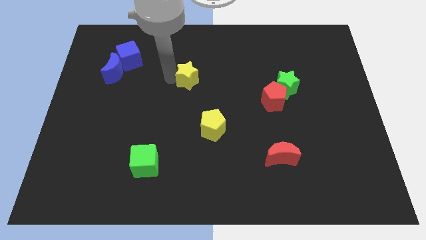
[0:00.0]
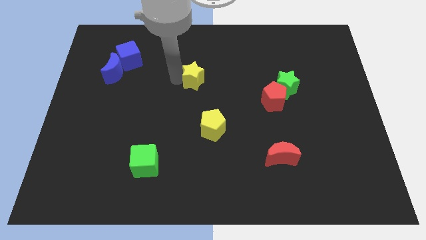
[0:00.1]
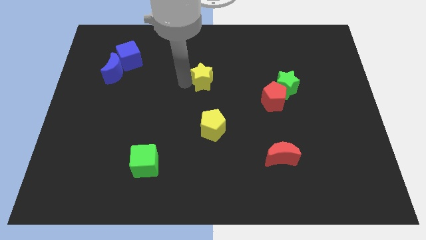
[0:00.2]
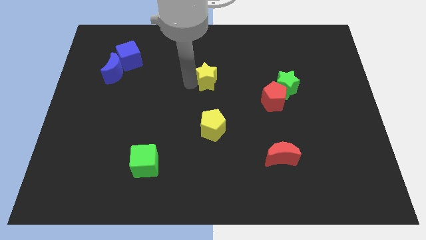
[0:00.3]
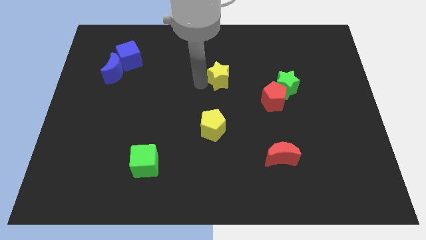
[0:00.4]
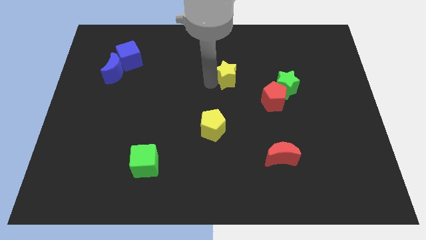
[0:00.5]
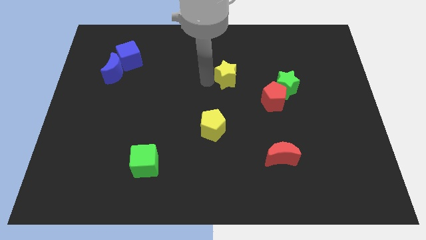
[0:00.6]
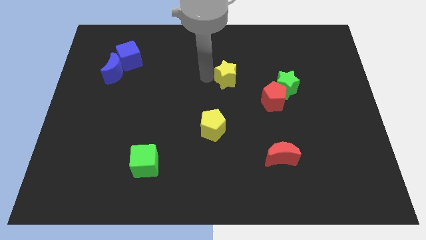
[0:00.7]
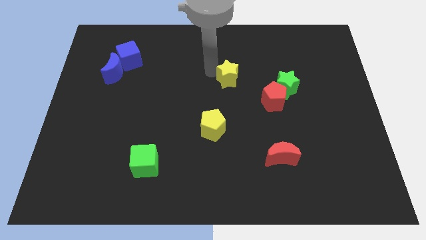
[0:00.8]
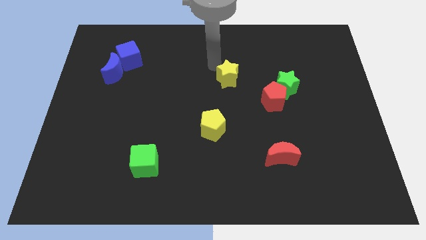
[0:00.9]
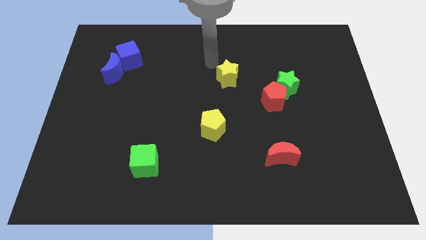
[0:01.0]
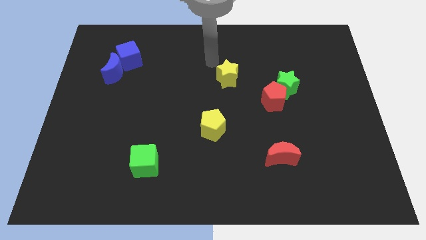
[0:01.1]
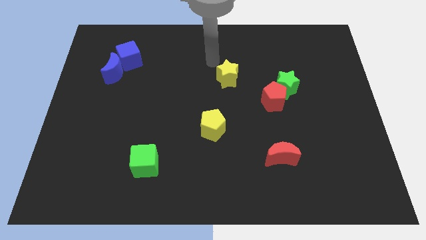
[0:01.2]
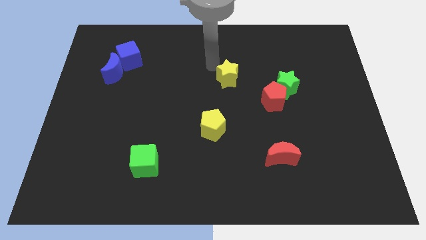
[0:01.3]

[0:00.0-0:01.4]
move the yellow star diagonal to the top left of the red pentagon

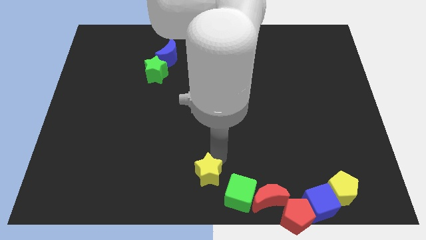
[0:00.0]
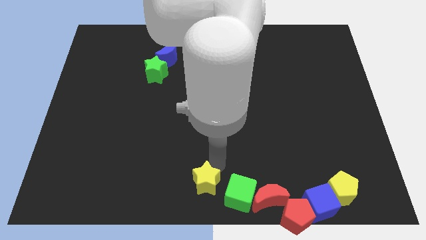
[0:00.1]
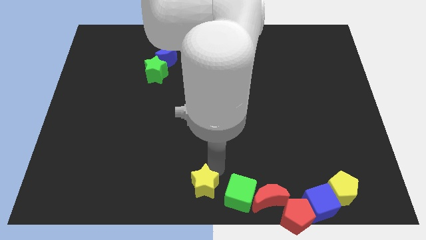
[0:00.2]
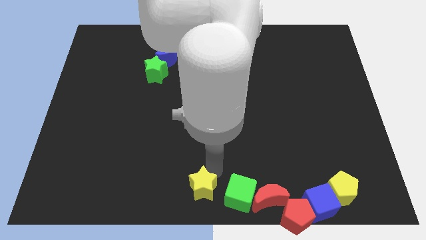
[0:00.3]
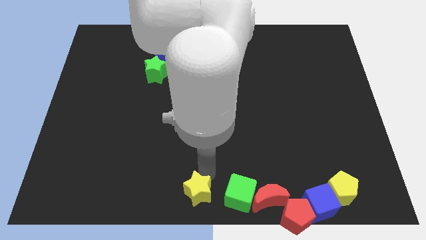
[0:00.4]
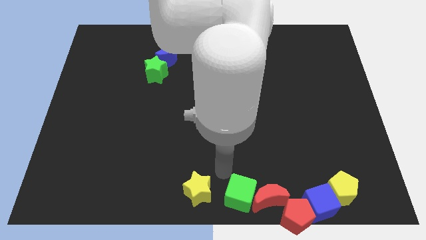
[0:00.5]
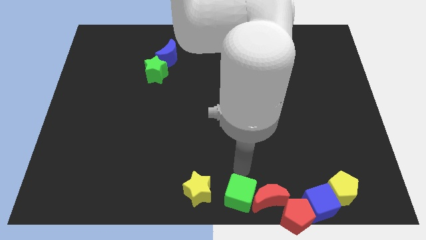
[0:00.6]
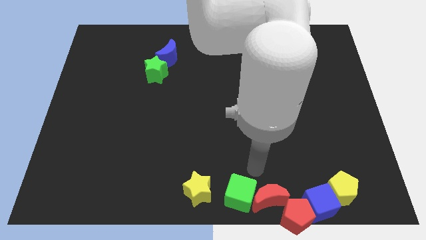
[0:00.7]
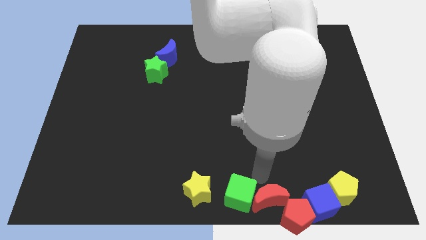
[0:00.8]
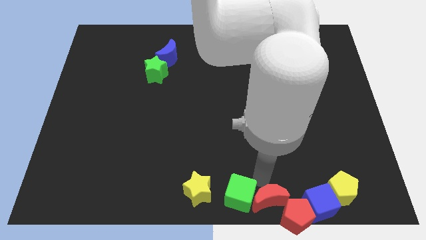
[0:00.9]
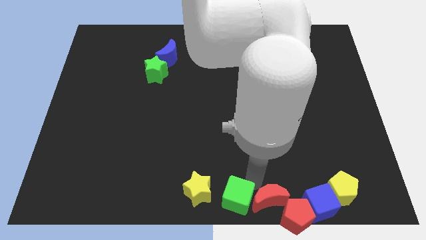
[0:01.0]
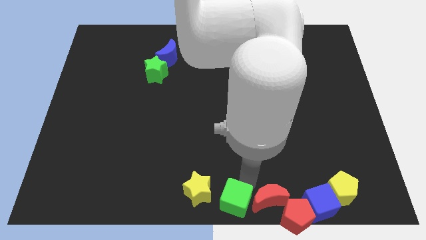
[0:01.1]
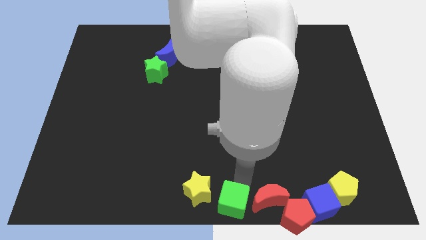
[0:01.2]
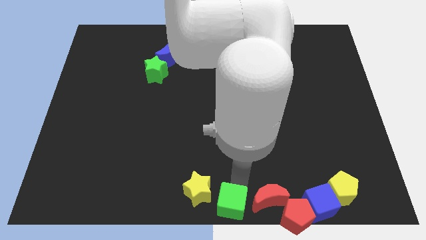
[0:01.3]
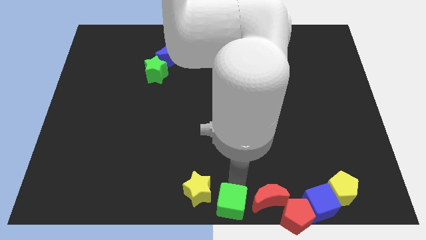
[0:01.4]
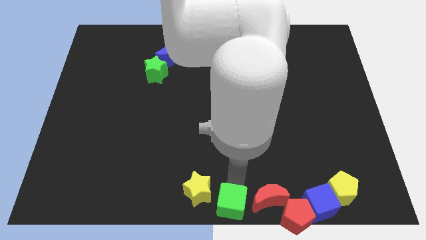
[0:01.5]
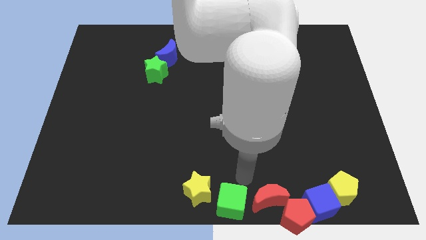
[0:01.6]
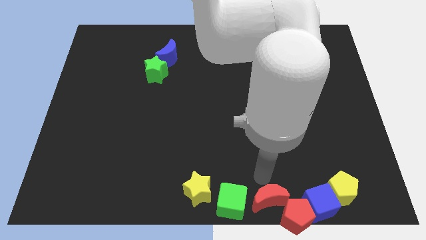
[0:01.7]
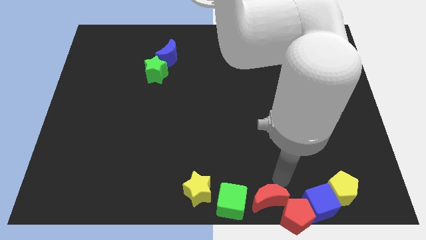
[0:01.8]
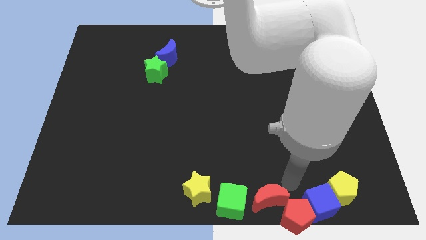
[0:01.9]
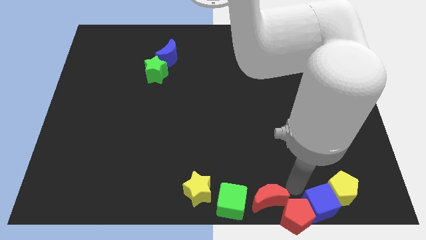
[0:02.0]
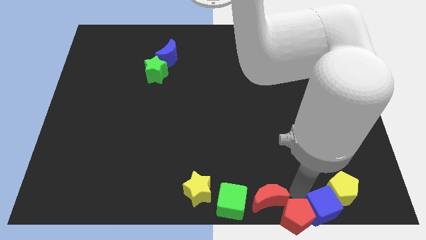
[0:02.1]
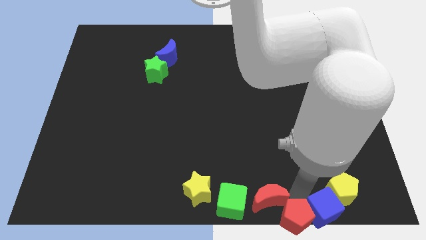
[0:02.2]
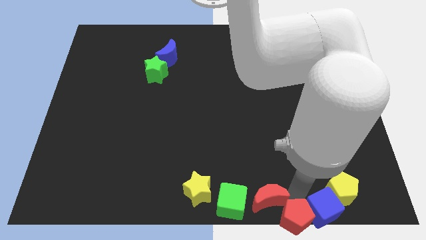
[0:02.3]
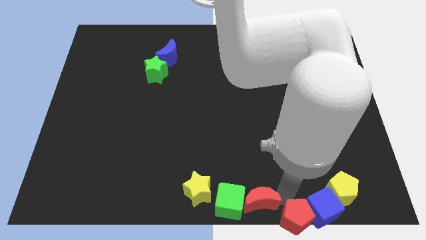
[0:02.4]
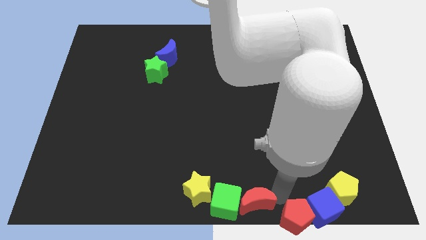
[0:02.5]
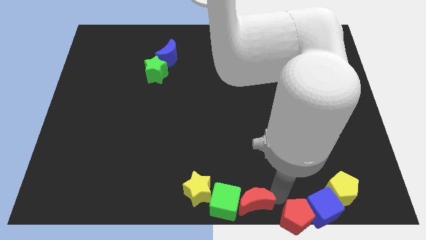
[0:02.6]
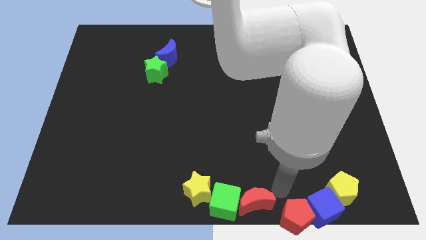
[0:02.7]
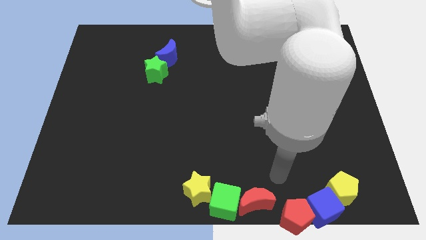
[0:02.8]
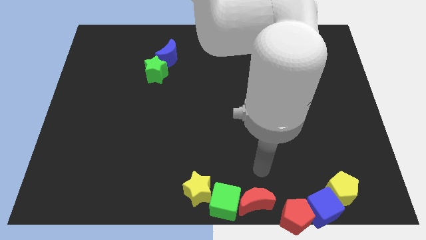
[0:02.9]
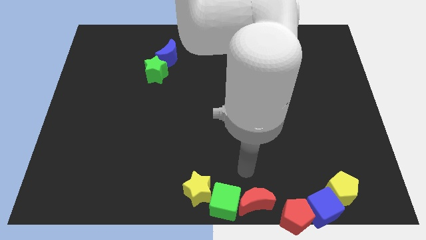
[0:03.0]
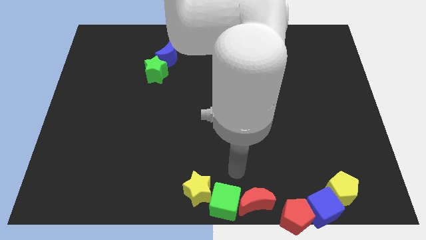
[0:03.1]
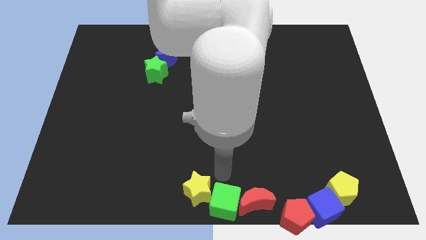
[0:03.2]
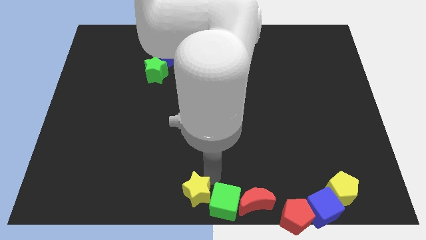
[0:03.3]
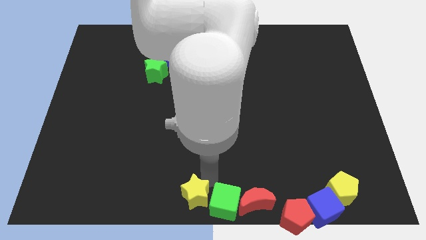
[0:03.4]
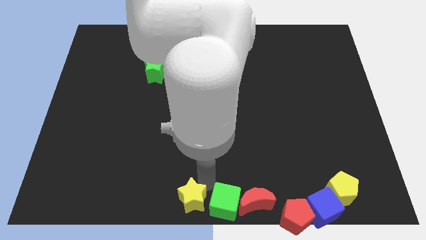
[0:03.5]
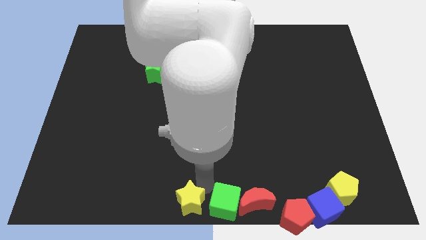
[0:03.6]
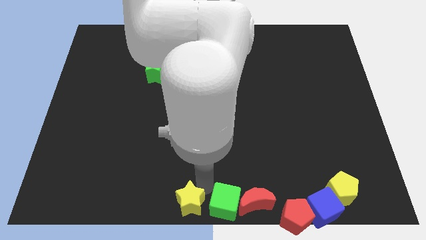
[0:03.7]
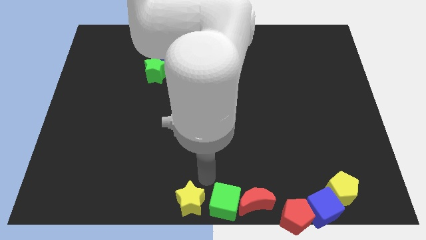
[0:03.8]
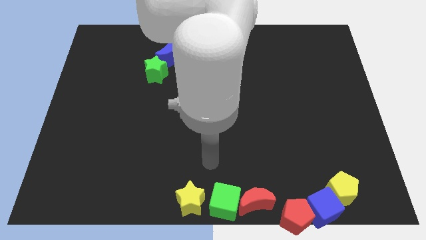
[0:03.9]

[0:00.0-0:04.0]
adjust the green cube and red moon and yellow star in a horizontal line

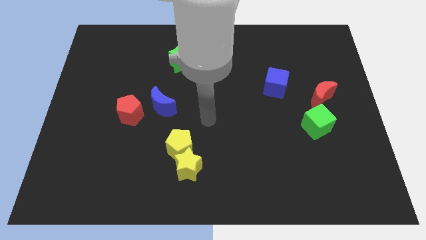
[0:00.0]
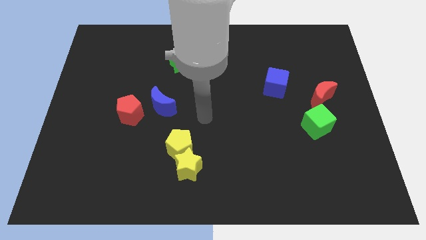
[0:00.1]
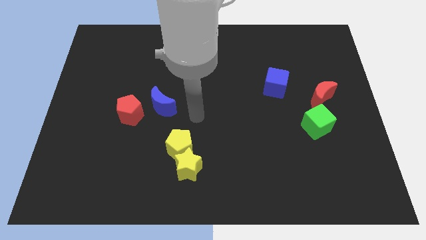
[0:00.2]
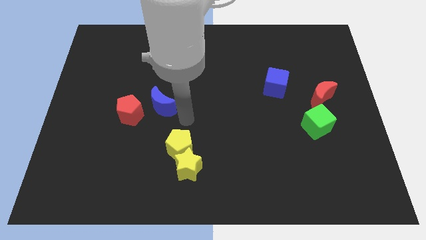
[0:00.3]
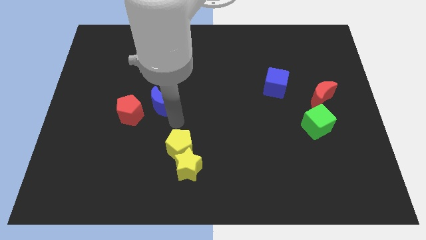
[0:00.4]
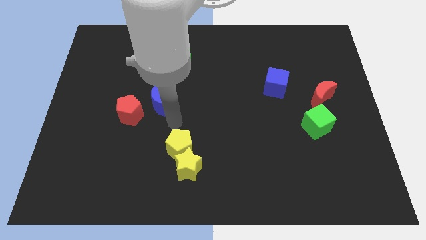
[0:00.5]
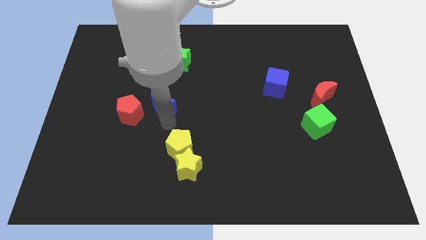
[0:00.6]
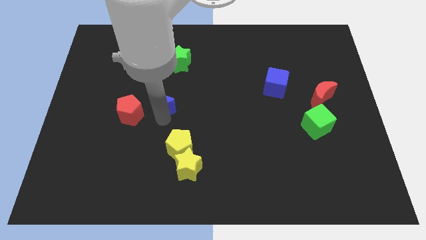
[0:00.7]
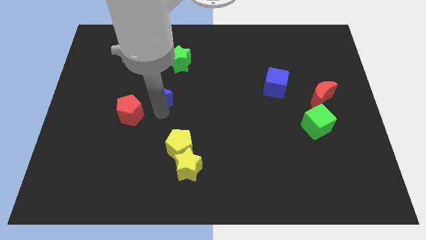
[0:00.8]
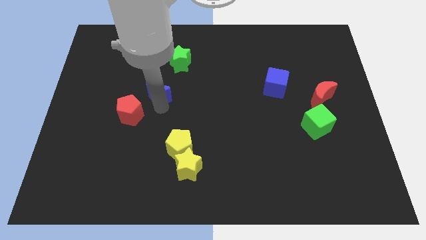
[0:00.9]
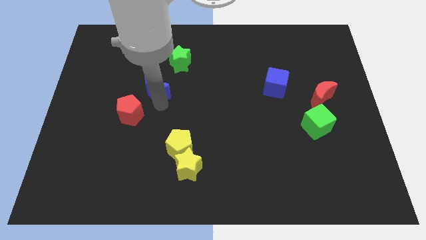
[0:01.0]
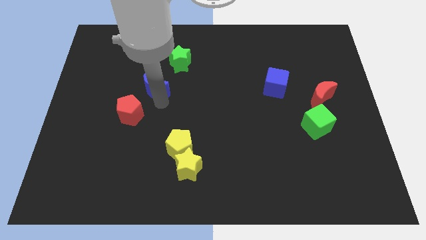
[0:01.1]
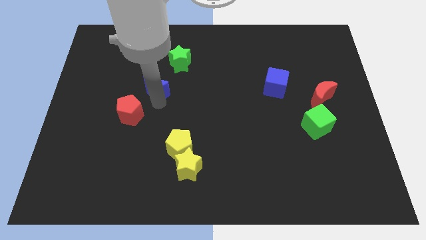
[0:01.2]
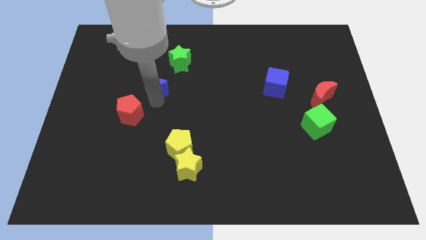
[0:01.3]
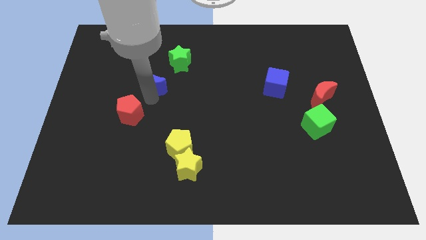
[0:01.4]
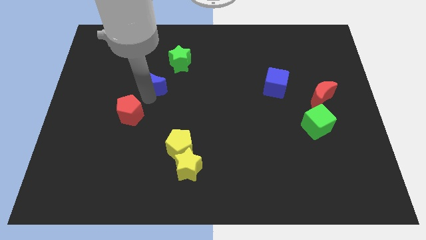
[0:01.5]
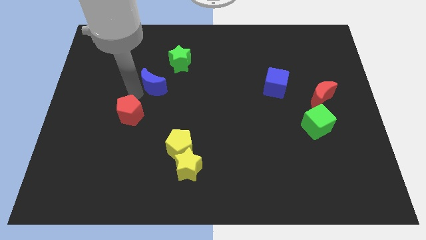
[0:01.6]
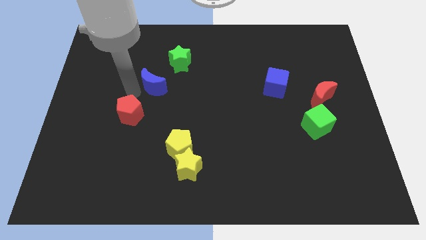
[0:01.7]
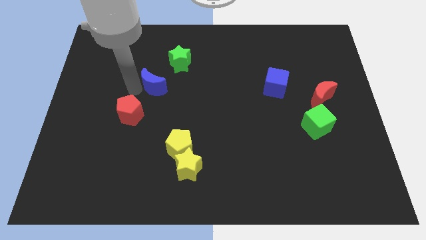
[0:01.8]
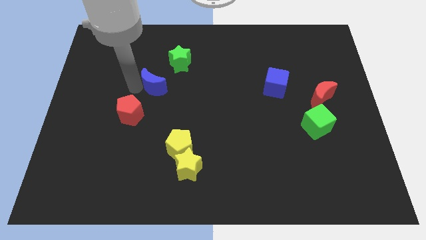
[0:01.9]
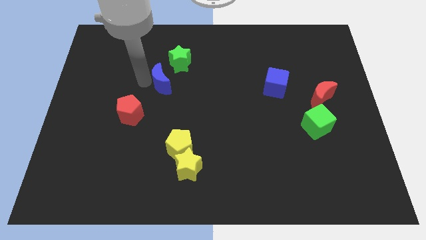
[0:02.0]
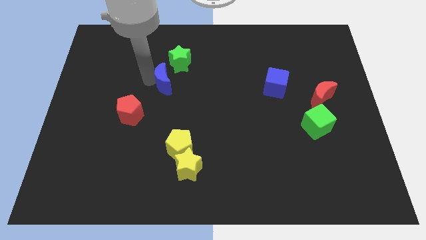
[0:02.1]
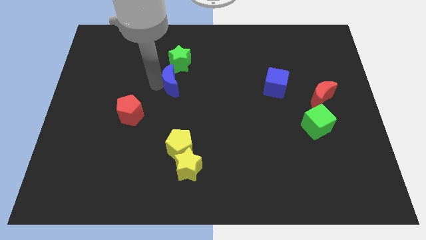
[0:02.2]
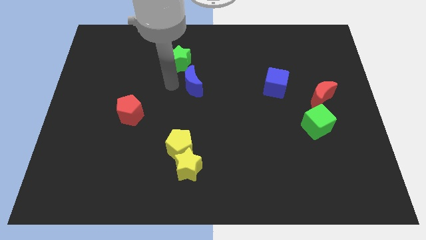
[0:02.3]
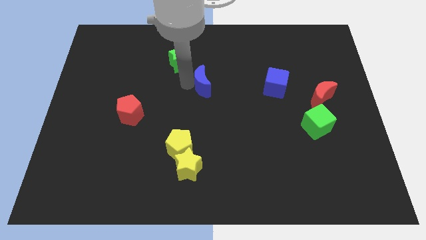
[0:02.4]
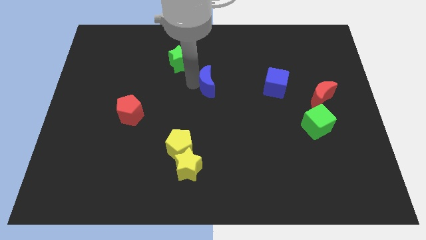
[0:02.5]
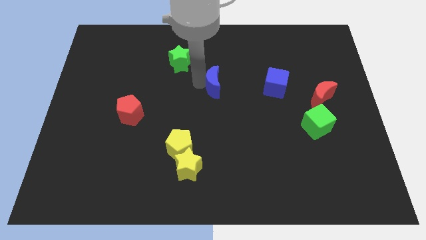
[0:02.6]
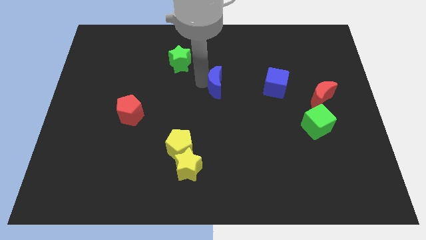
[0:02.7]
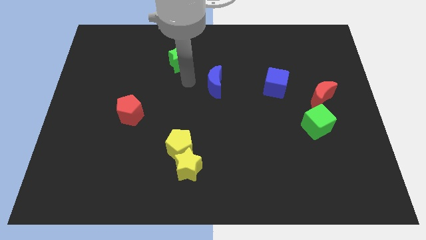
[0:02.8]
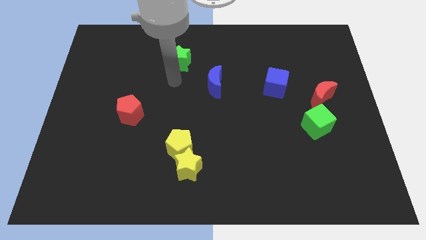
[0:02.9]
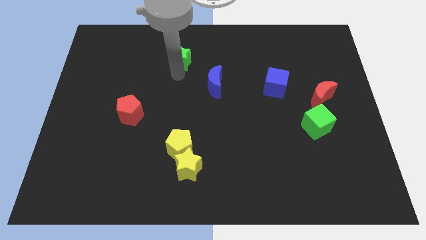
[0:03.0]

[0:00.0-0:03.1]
move the blue moon horizontally left of the blue cube

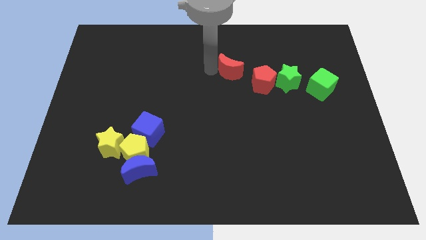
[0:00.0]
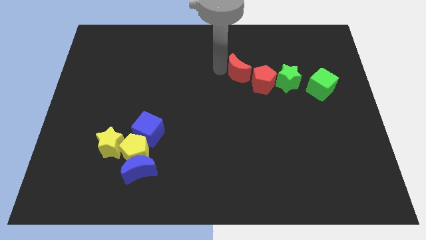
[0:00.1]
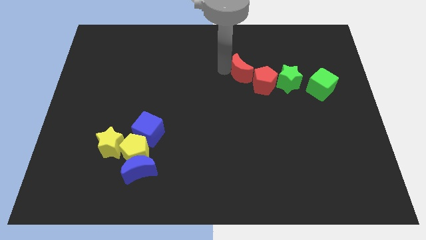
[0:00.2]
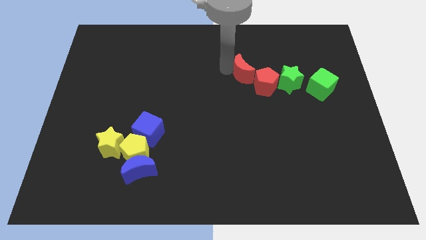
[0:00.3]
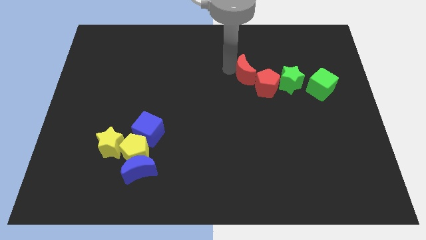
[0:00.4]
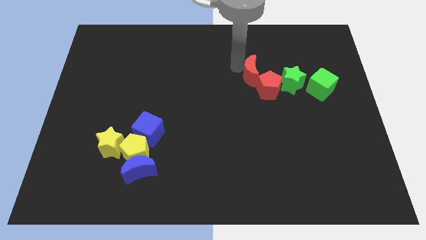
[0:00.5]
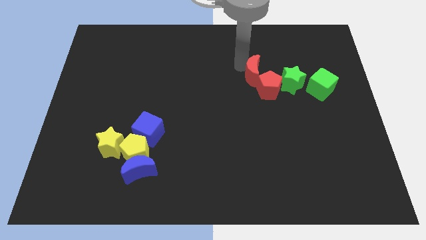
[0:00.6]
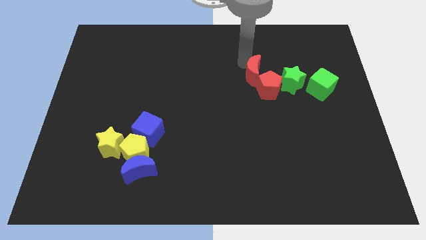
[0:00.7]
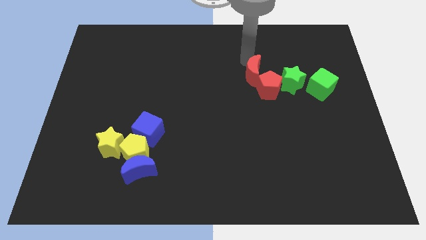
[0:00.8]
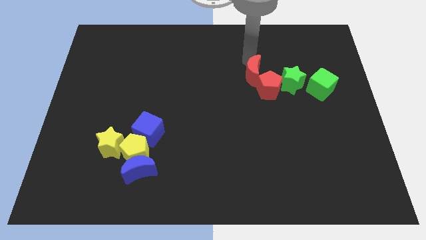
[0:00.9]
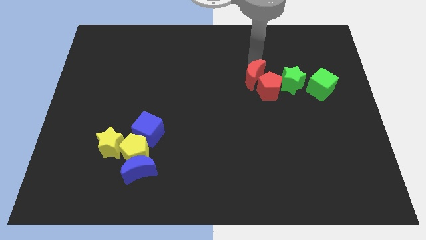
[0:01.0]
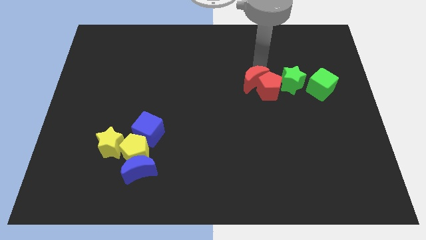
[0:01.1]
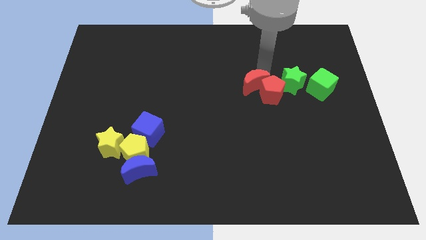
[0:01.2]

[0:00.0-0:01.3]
move the red moon into the top of red pentagon
